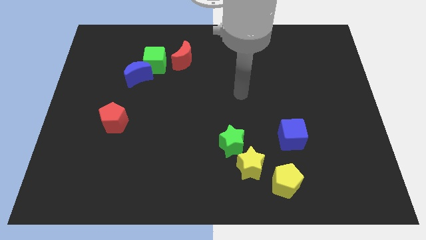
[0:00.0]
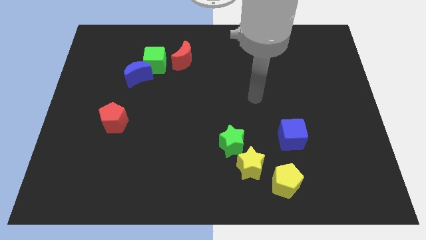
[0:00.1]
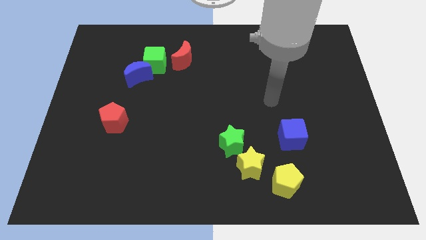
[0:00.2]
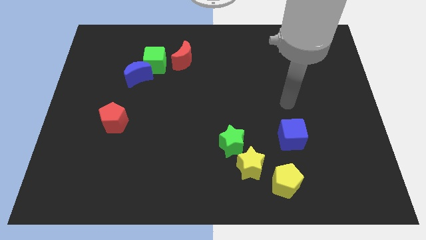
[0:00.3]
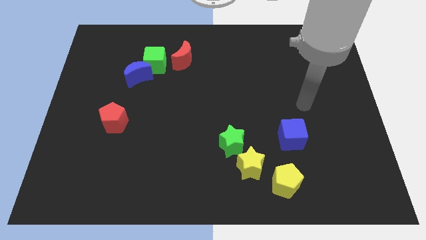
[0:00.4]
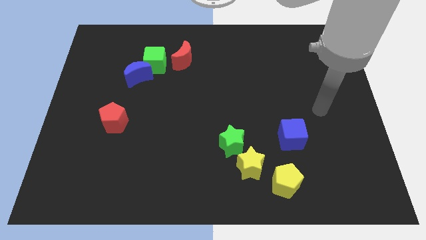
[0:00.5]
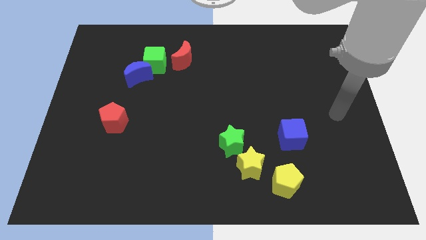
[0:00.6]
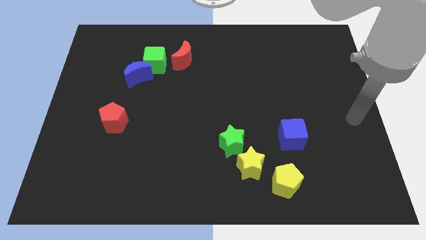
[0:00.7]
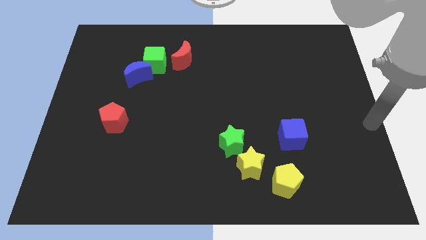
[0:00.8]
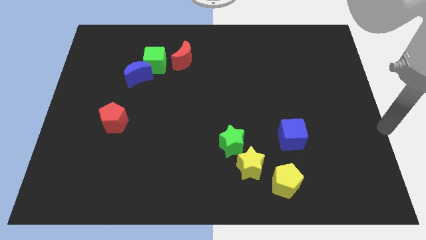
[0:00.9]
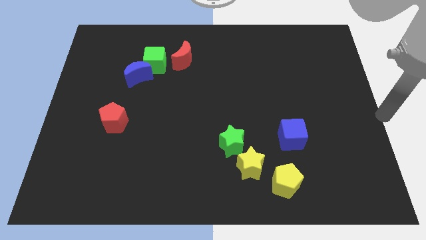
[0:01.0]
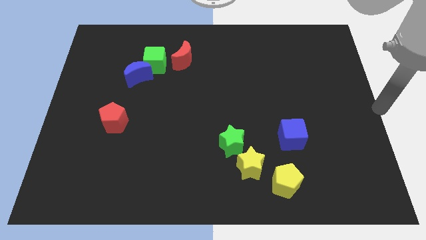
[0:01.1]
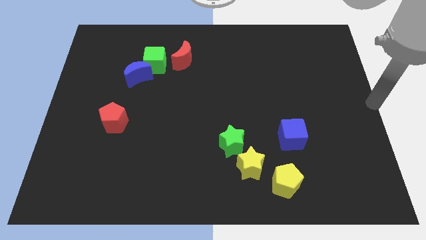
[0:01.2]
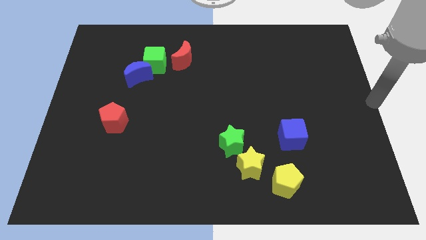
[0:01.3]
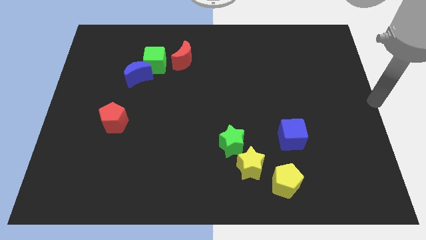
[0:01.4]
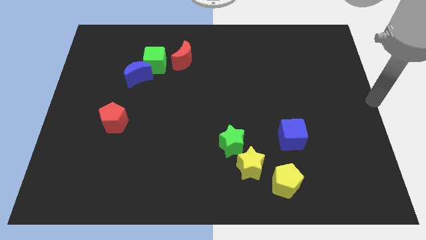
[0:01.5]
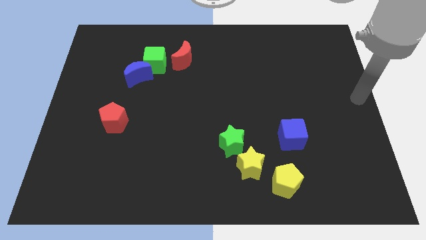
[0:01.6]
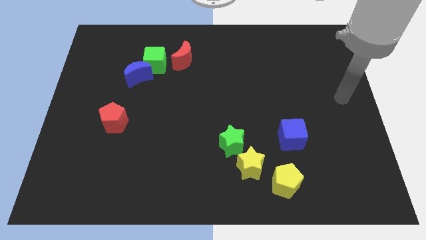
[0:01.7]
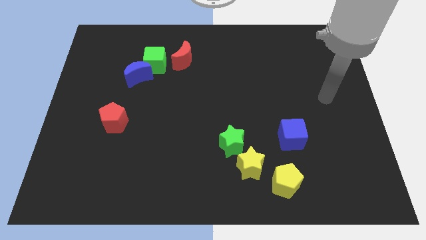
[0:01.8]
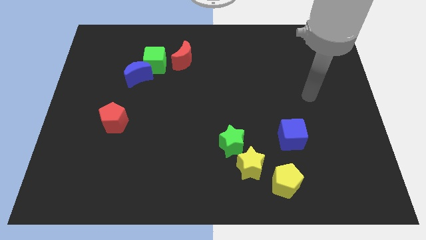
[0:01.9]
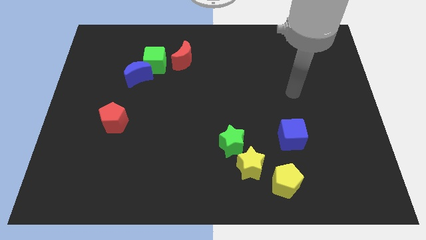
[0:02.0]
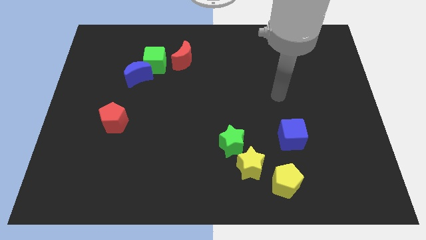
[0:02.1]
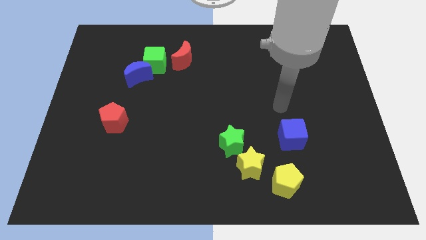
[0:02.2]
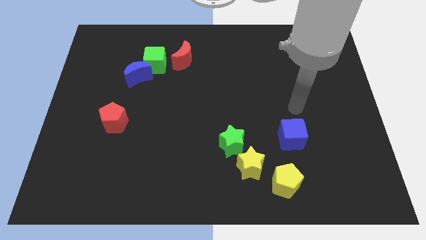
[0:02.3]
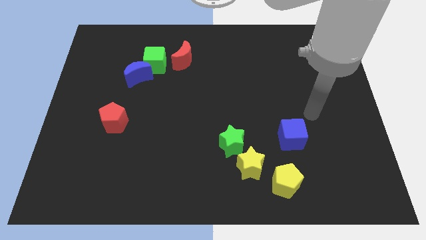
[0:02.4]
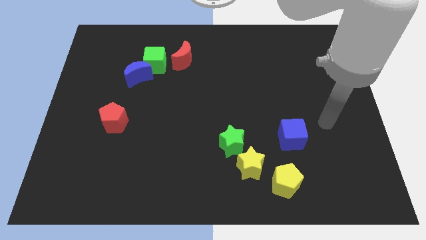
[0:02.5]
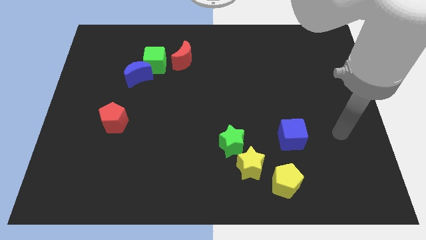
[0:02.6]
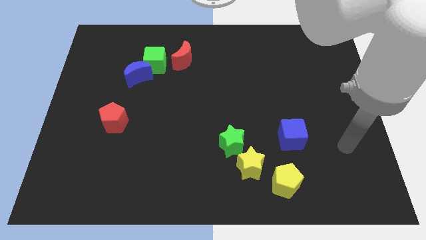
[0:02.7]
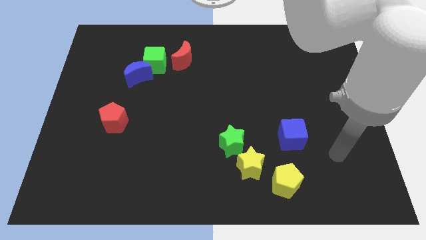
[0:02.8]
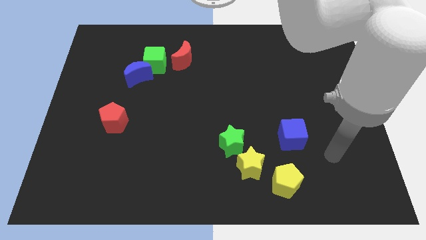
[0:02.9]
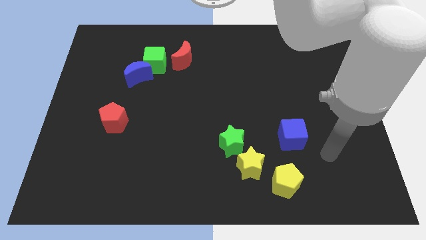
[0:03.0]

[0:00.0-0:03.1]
move your arm to the right side of the blue cube

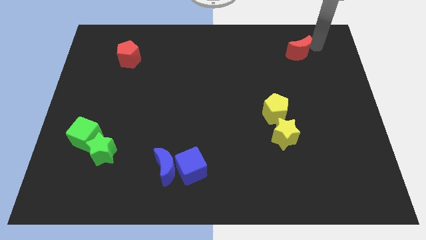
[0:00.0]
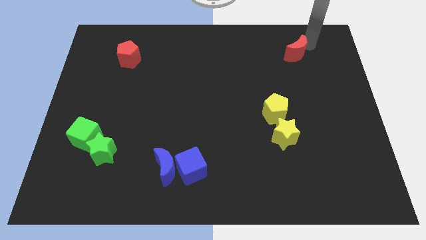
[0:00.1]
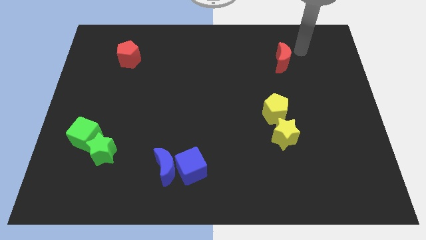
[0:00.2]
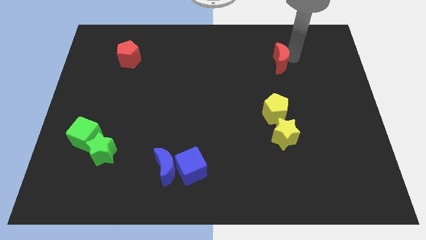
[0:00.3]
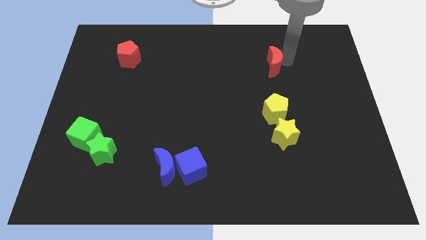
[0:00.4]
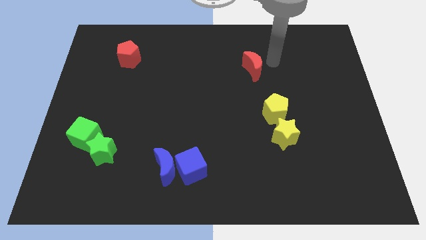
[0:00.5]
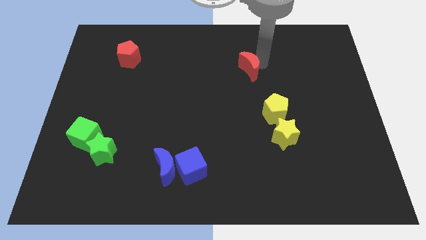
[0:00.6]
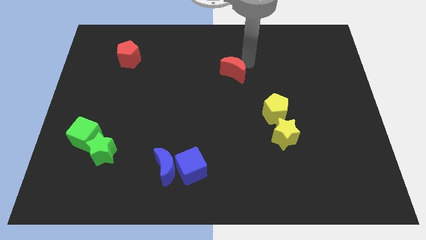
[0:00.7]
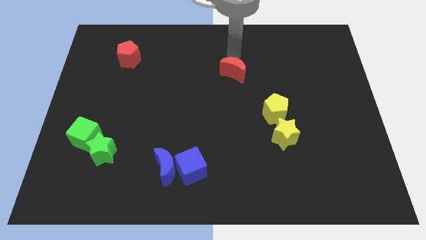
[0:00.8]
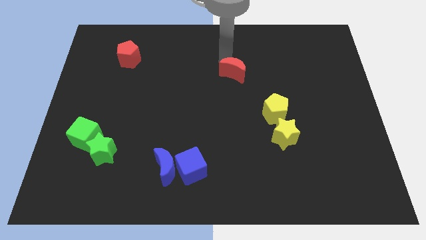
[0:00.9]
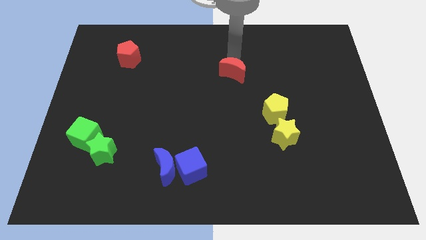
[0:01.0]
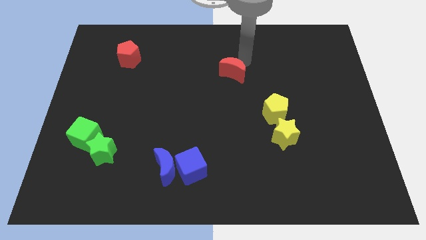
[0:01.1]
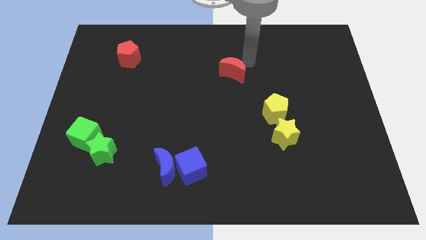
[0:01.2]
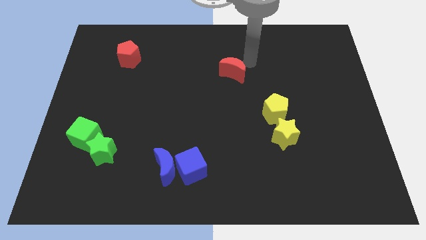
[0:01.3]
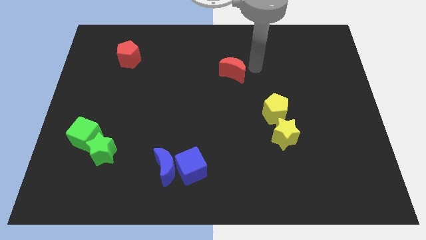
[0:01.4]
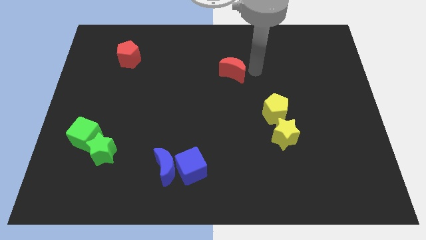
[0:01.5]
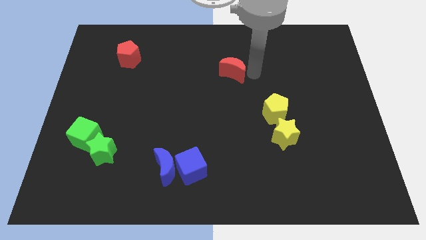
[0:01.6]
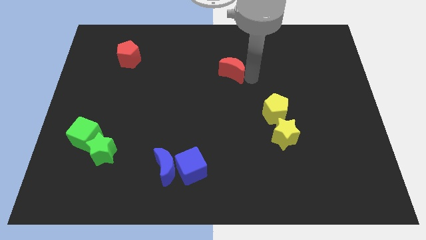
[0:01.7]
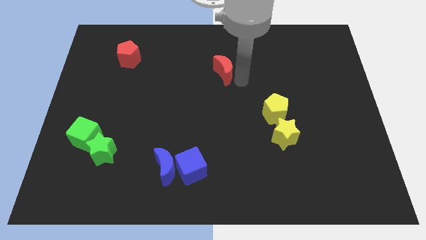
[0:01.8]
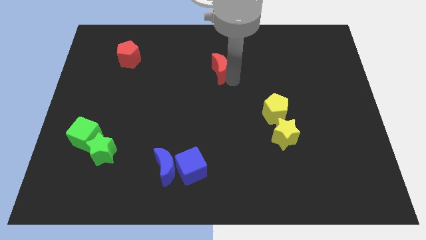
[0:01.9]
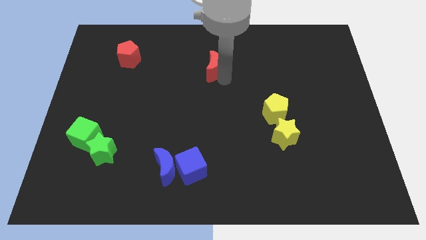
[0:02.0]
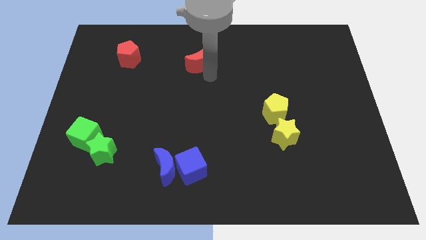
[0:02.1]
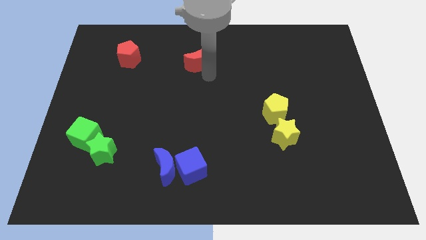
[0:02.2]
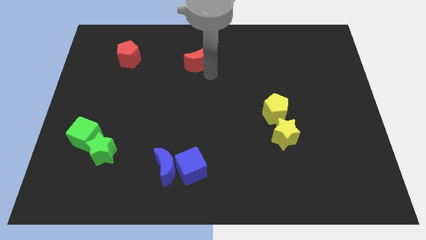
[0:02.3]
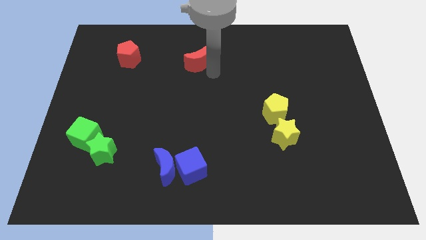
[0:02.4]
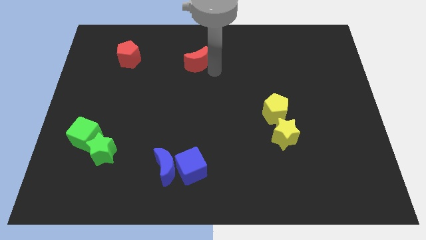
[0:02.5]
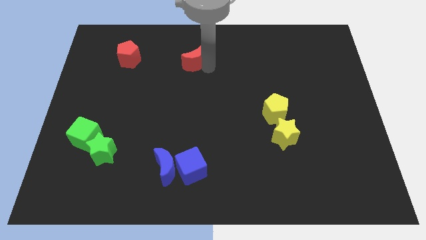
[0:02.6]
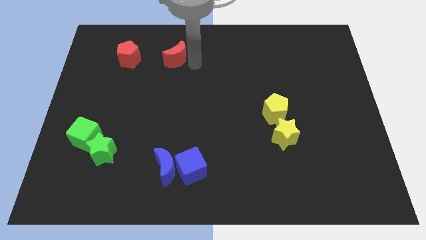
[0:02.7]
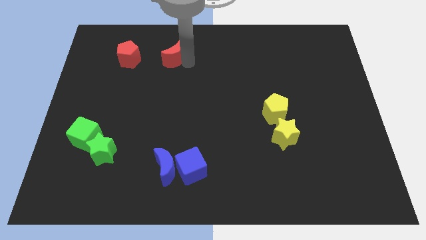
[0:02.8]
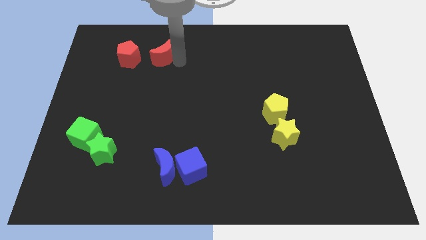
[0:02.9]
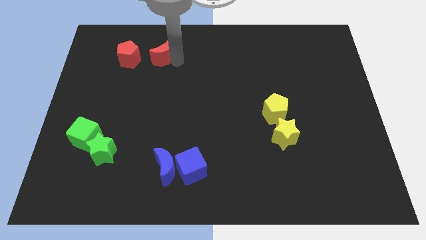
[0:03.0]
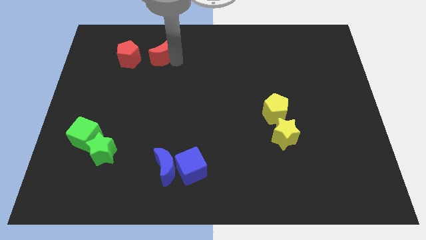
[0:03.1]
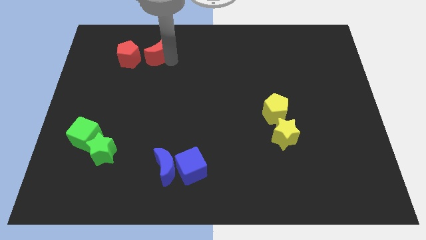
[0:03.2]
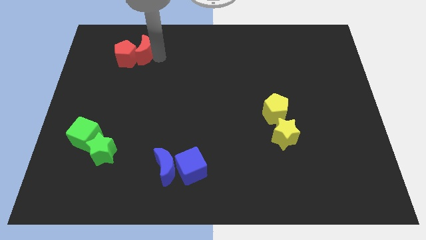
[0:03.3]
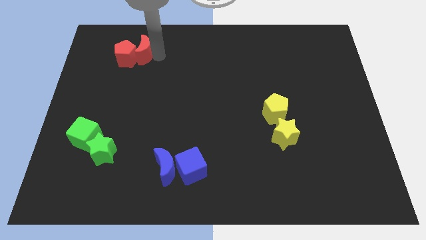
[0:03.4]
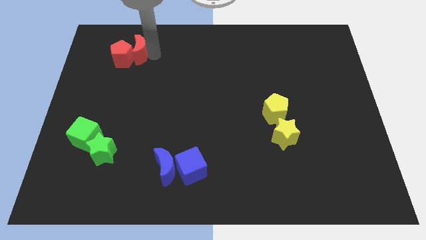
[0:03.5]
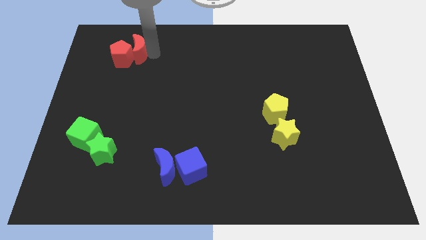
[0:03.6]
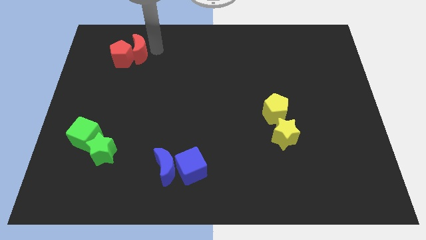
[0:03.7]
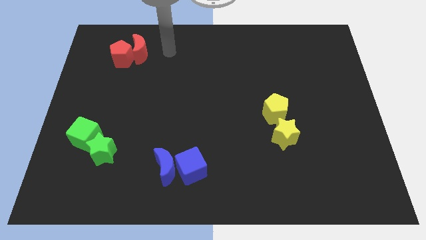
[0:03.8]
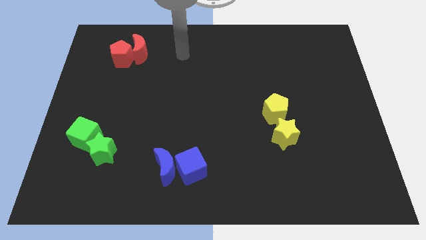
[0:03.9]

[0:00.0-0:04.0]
slide the red crescent to the right side of the red pentagon

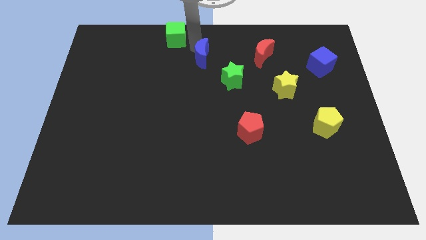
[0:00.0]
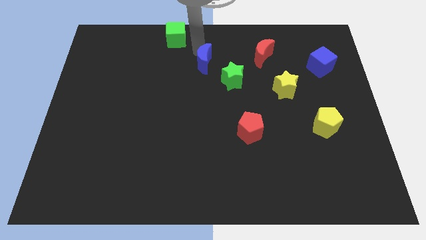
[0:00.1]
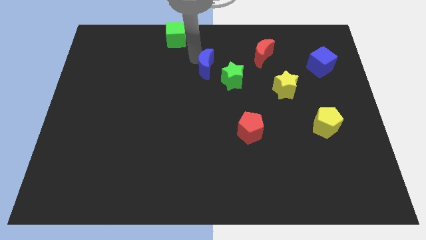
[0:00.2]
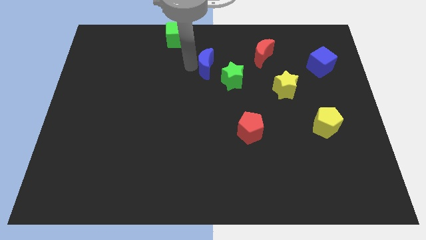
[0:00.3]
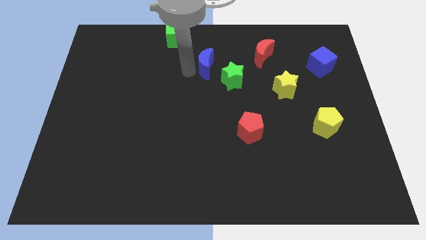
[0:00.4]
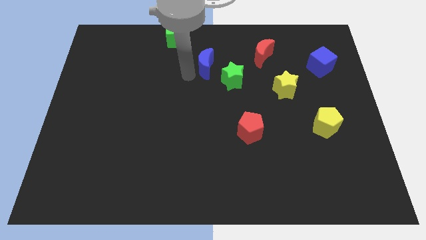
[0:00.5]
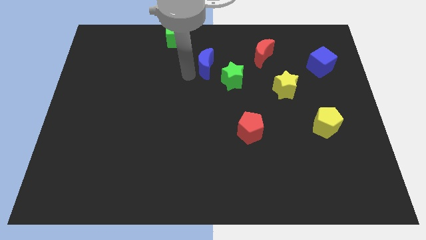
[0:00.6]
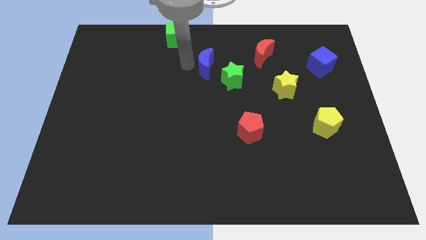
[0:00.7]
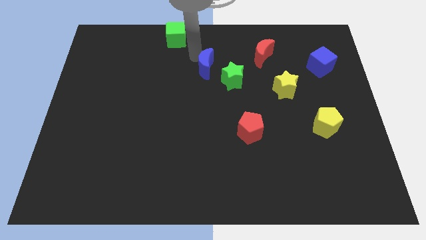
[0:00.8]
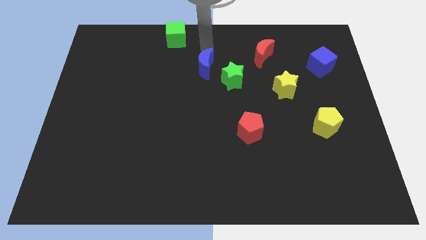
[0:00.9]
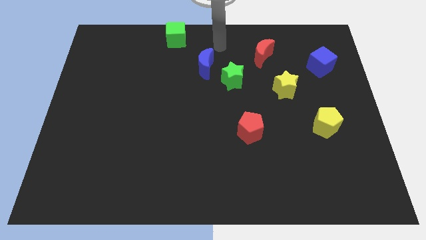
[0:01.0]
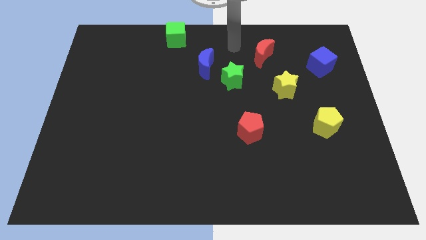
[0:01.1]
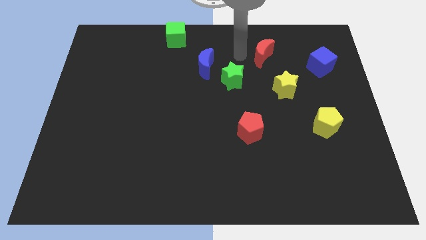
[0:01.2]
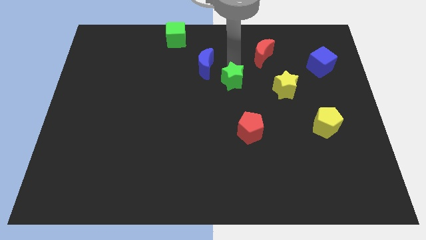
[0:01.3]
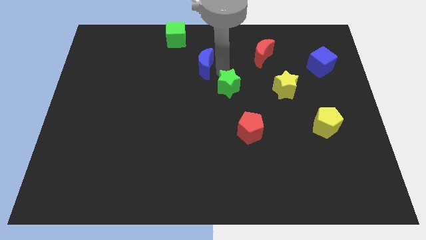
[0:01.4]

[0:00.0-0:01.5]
push the blue crescent slightly towards the green star

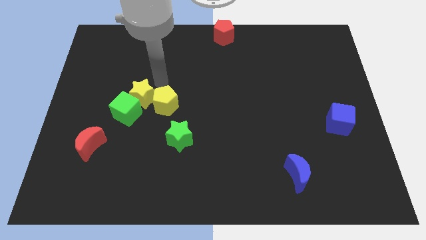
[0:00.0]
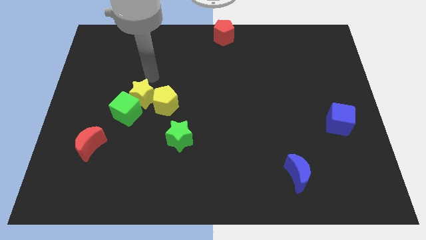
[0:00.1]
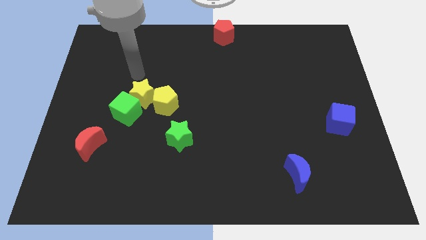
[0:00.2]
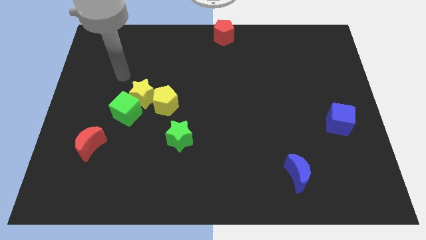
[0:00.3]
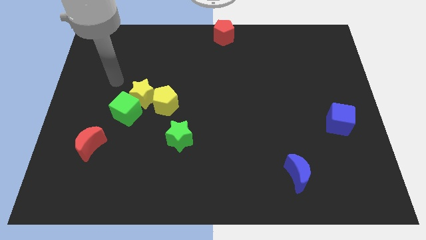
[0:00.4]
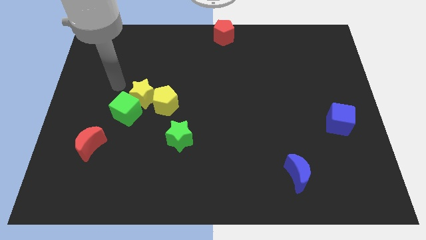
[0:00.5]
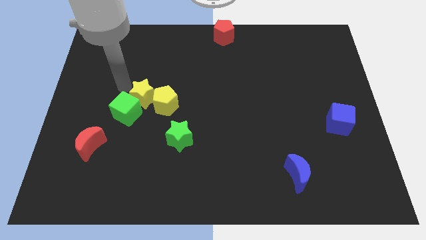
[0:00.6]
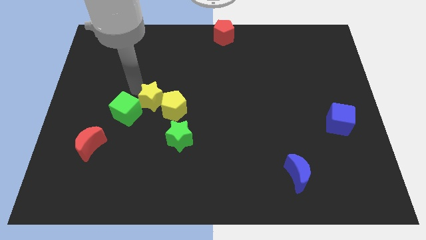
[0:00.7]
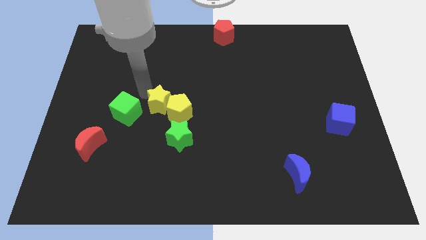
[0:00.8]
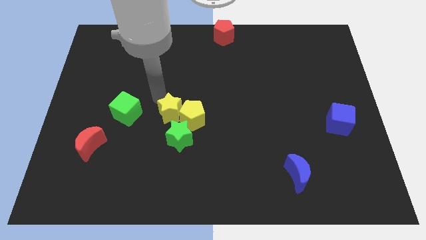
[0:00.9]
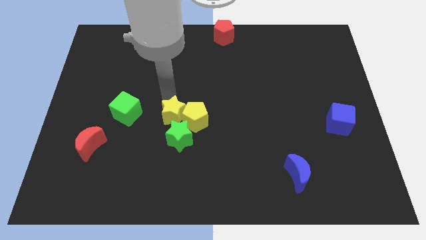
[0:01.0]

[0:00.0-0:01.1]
move the yellow blocks to the top of the green star
